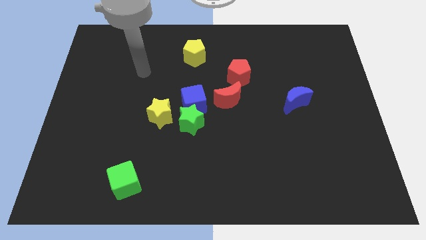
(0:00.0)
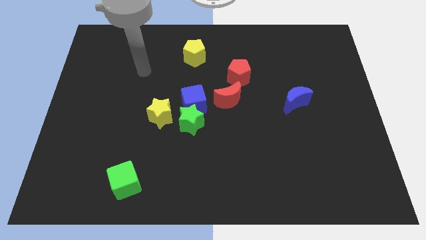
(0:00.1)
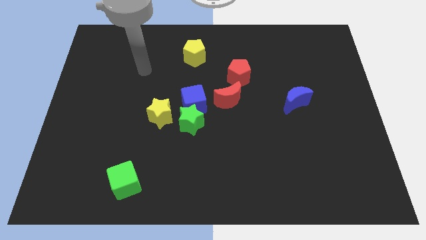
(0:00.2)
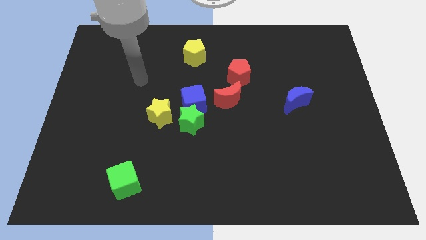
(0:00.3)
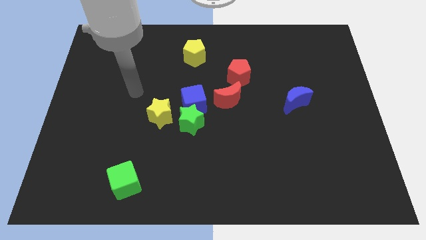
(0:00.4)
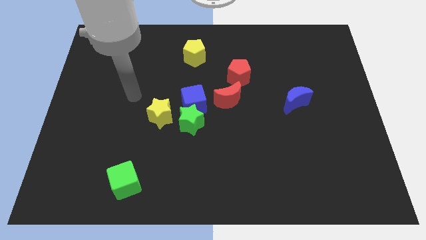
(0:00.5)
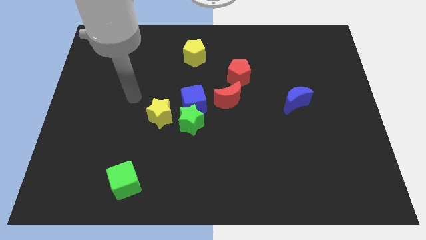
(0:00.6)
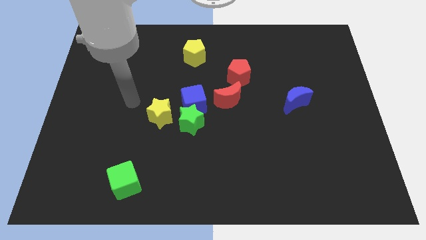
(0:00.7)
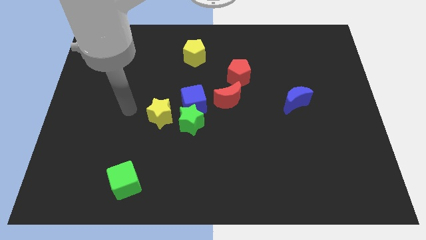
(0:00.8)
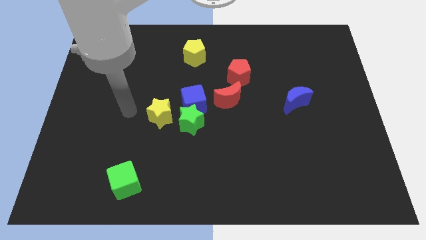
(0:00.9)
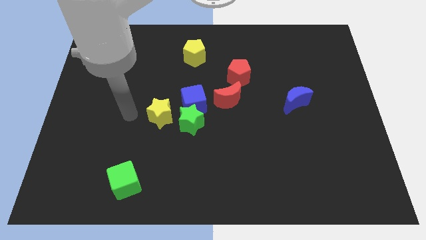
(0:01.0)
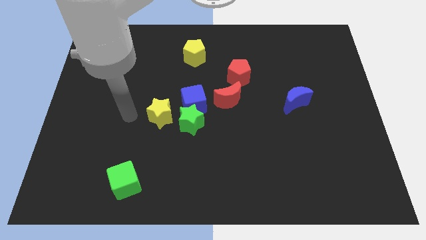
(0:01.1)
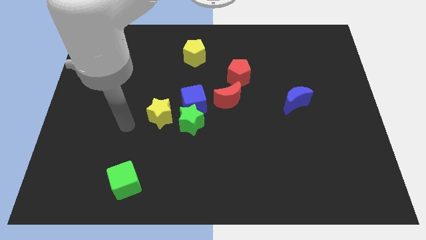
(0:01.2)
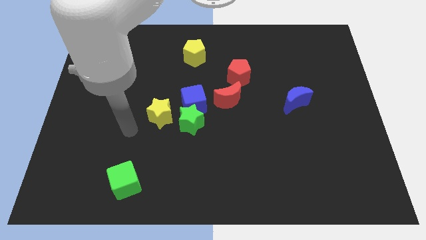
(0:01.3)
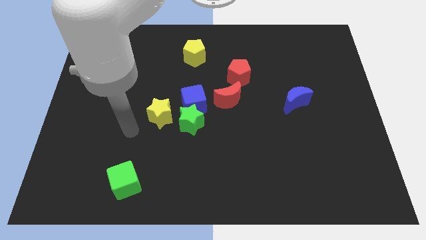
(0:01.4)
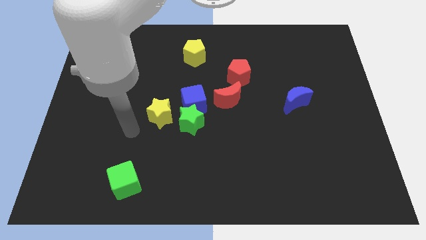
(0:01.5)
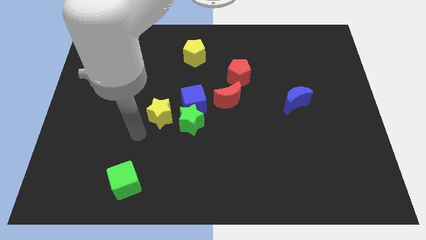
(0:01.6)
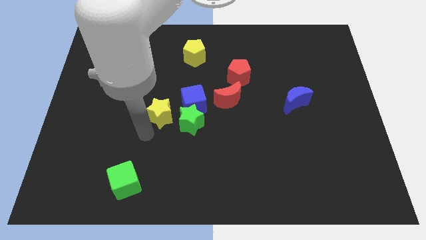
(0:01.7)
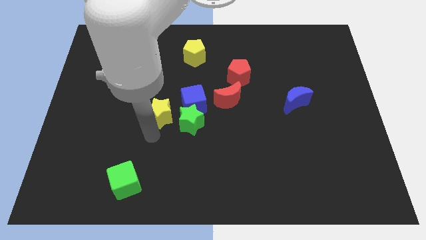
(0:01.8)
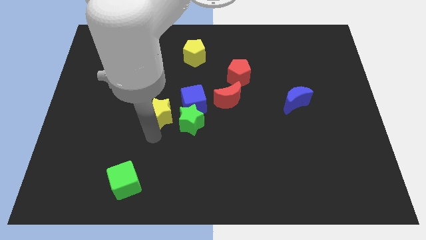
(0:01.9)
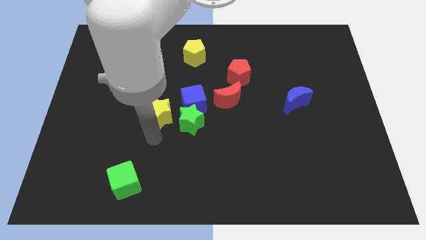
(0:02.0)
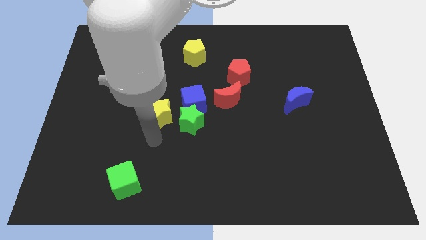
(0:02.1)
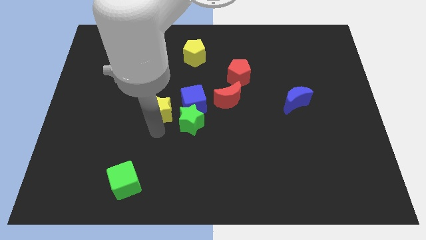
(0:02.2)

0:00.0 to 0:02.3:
move your arm downwards

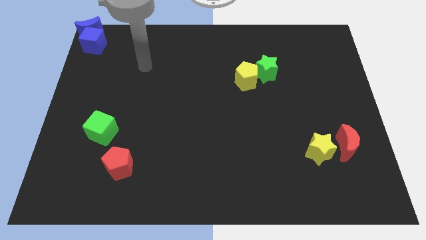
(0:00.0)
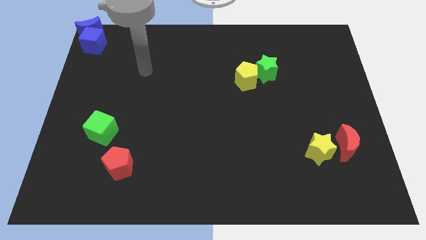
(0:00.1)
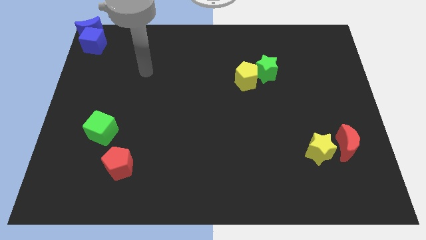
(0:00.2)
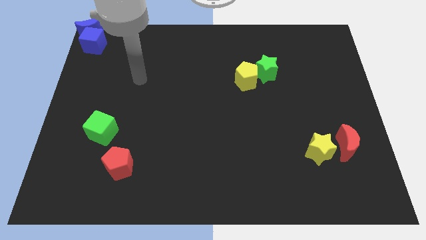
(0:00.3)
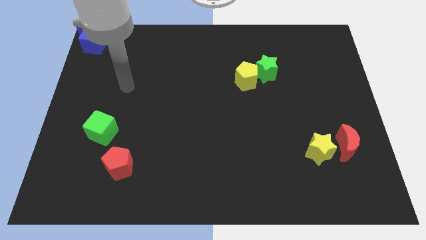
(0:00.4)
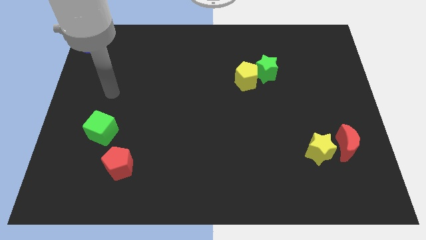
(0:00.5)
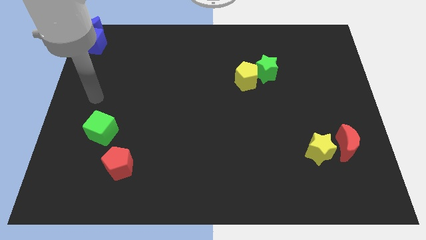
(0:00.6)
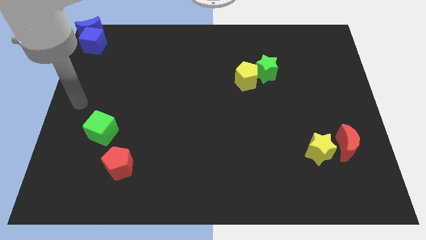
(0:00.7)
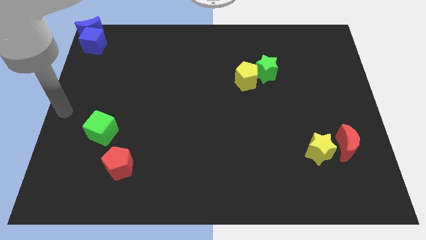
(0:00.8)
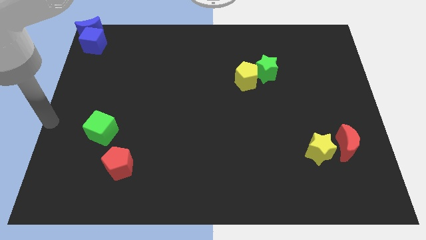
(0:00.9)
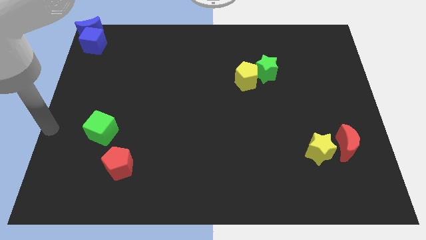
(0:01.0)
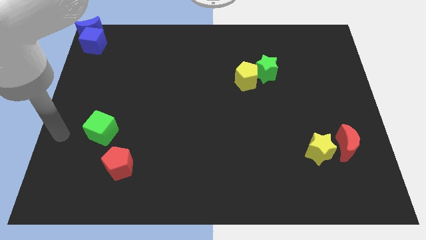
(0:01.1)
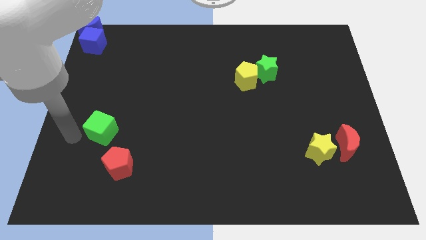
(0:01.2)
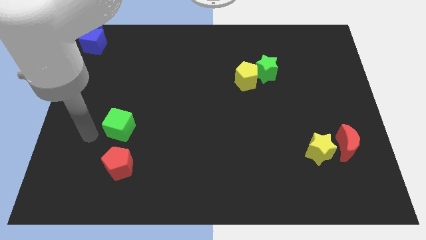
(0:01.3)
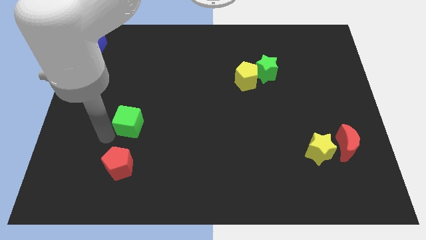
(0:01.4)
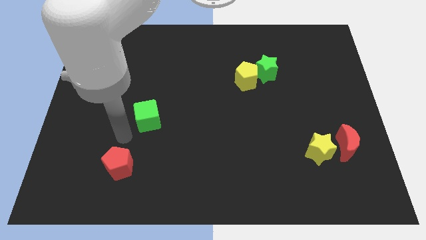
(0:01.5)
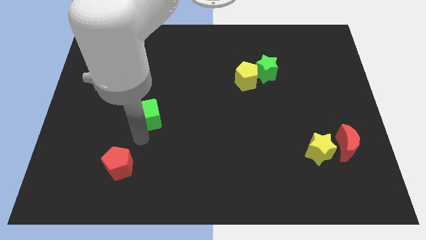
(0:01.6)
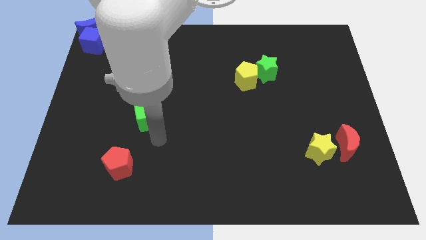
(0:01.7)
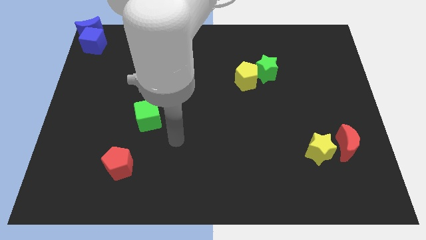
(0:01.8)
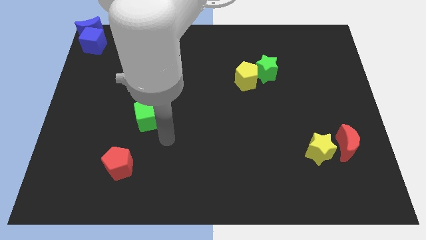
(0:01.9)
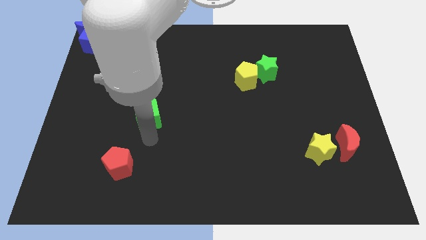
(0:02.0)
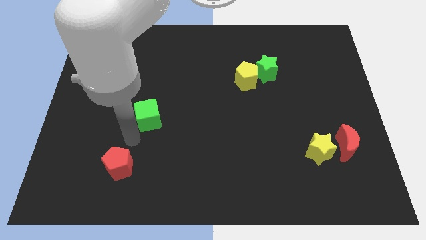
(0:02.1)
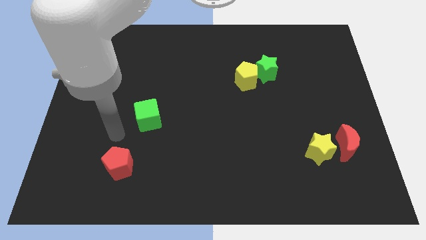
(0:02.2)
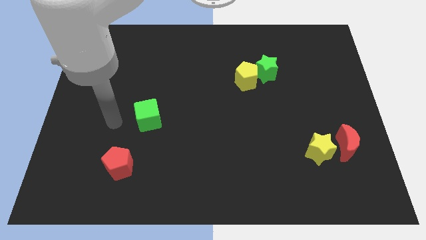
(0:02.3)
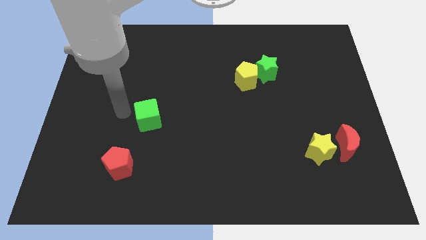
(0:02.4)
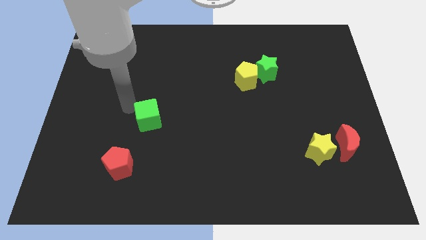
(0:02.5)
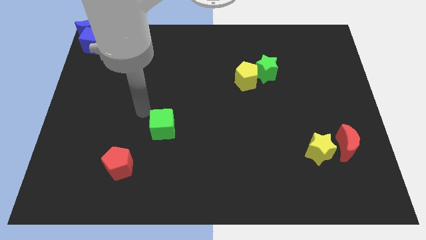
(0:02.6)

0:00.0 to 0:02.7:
place the green cube between red pentagon and yellow pentagon

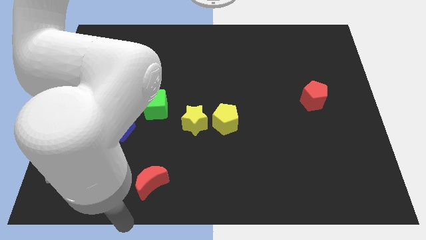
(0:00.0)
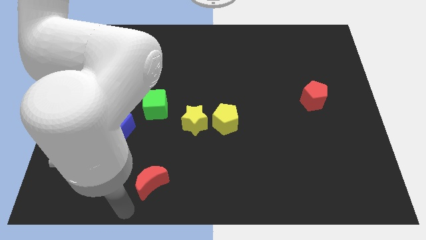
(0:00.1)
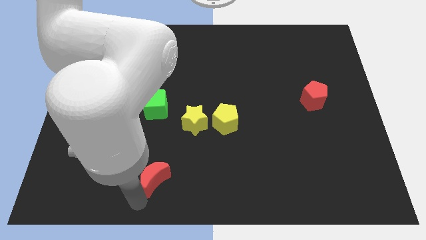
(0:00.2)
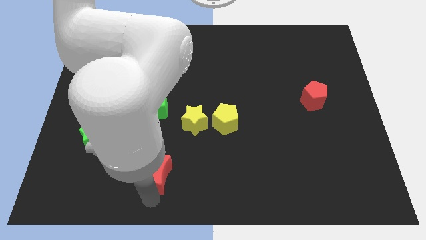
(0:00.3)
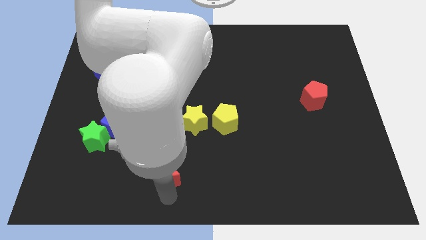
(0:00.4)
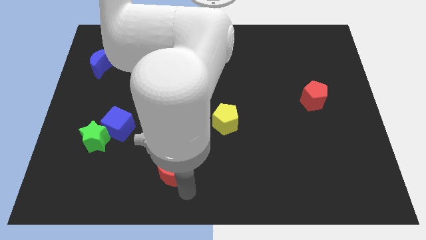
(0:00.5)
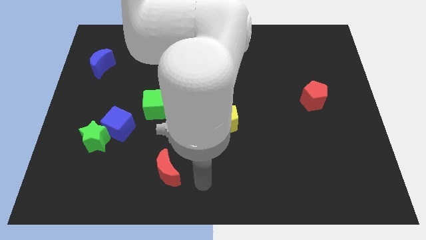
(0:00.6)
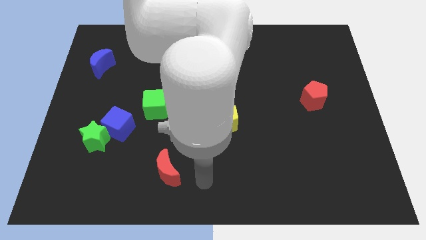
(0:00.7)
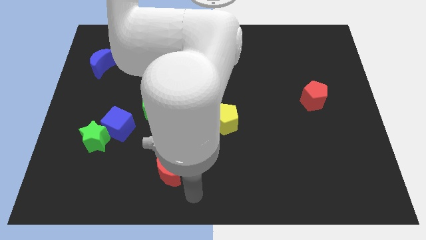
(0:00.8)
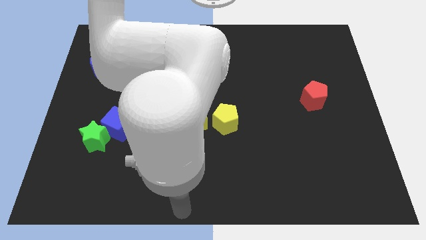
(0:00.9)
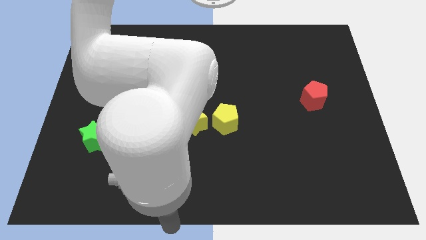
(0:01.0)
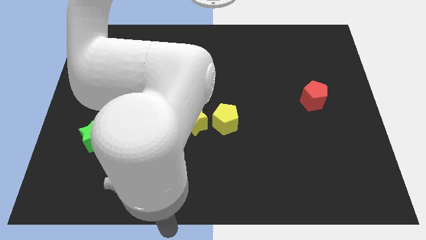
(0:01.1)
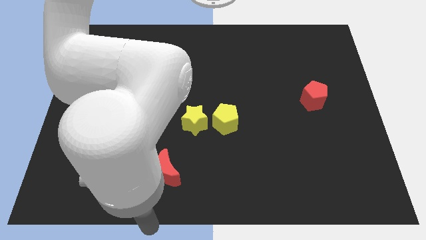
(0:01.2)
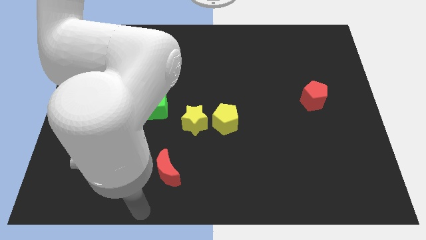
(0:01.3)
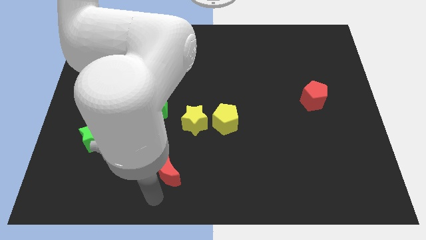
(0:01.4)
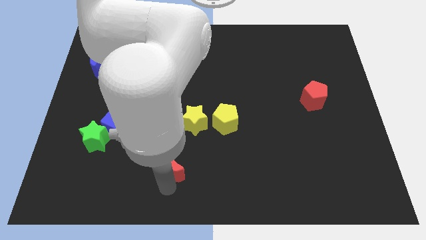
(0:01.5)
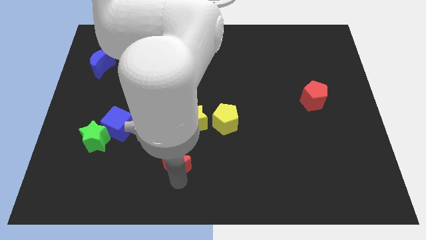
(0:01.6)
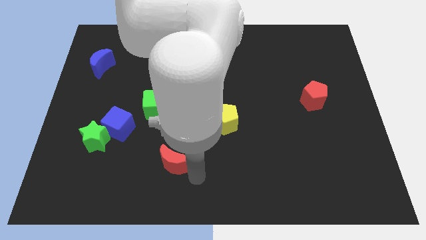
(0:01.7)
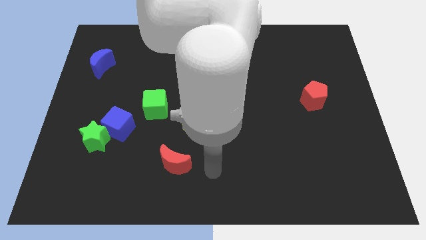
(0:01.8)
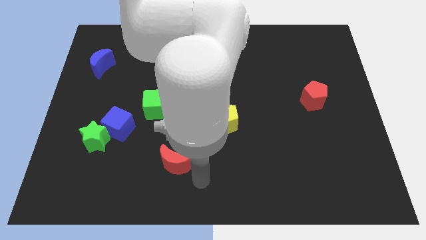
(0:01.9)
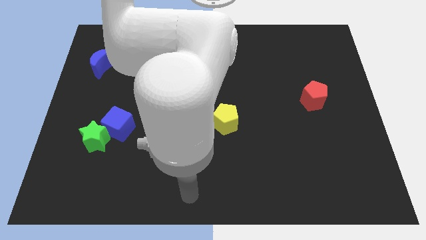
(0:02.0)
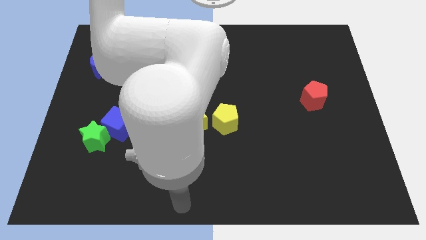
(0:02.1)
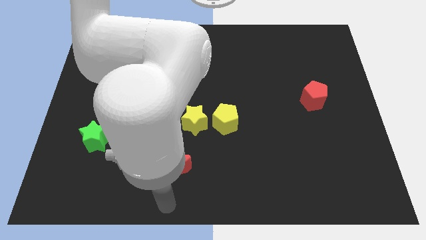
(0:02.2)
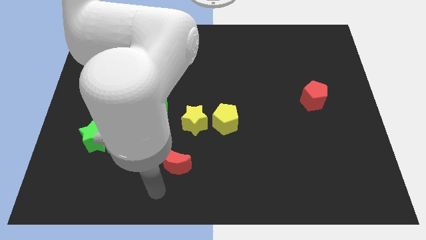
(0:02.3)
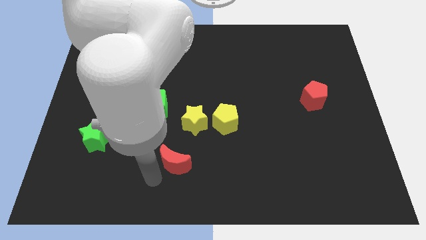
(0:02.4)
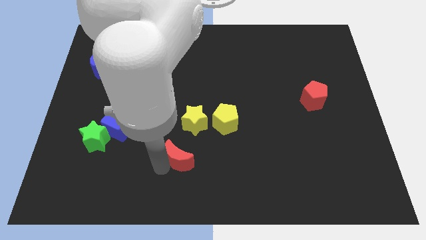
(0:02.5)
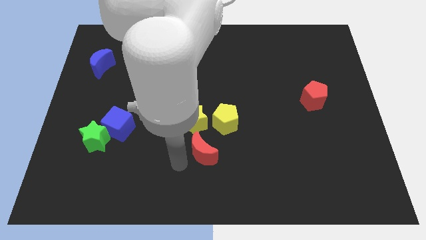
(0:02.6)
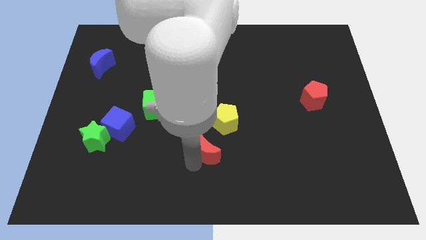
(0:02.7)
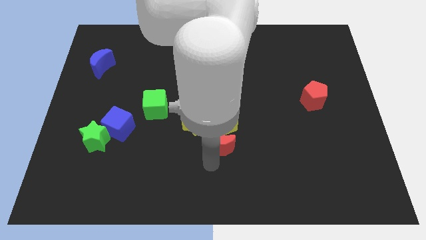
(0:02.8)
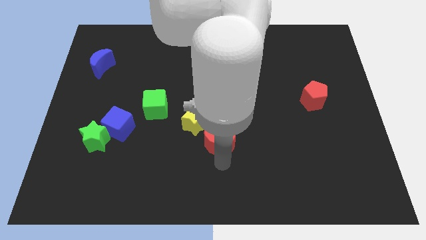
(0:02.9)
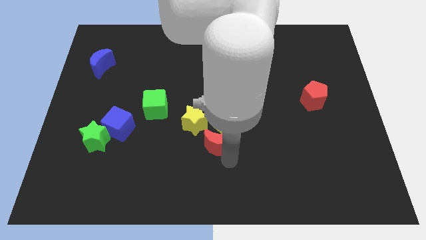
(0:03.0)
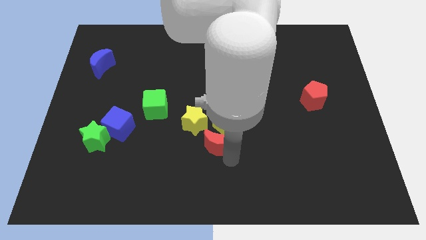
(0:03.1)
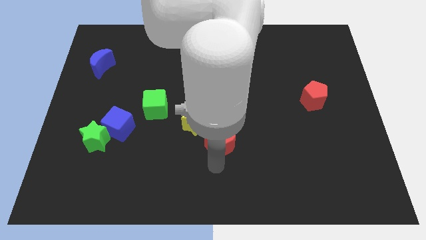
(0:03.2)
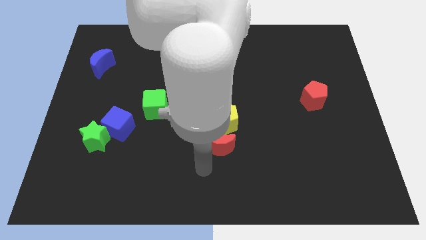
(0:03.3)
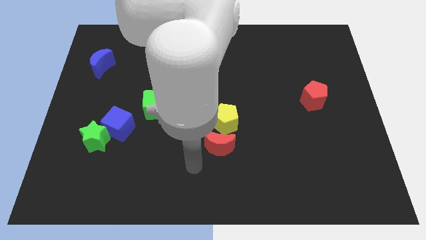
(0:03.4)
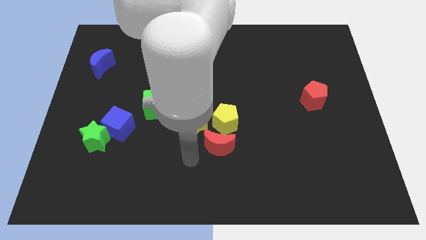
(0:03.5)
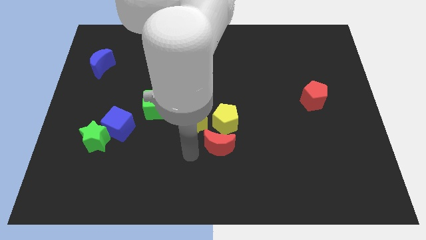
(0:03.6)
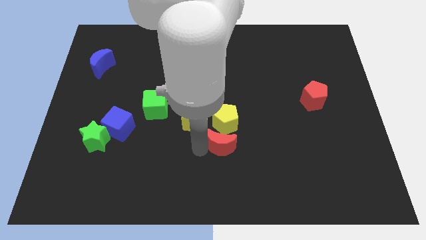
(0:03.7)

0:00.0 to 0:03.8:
place the red moon below the yellow pentagon
